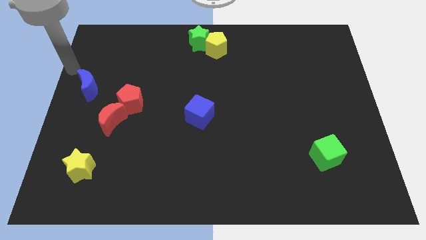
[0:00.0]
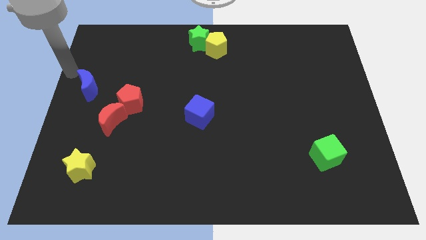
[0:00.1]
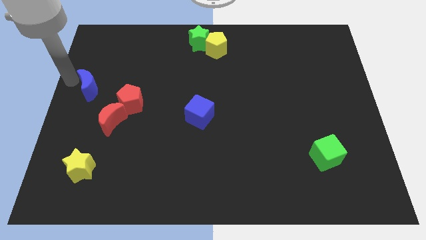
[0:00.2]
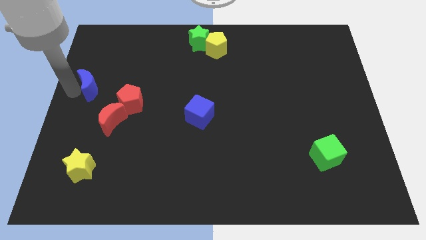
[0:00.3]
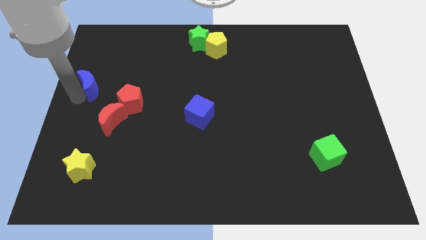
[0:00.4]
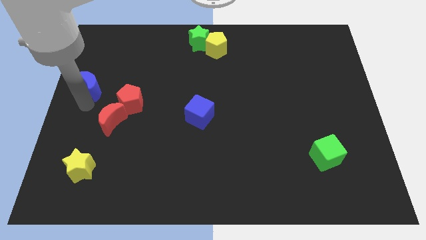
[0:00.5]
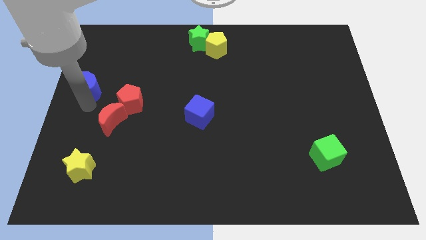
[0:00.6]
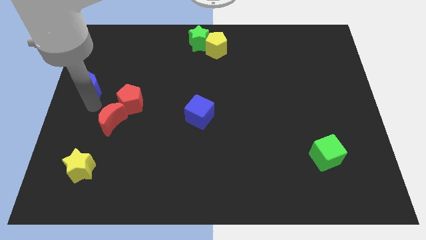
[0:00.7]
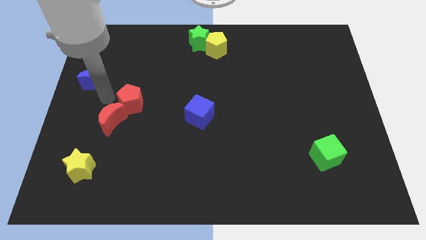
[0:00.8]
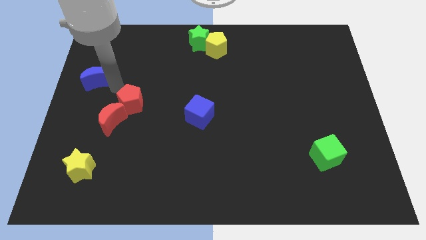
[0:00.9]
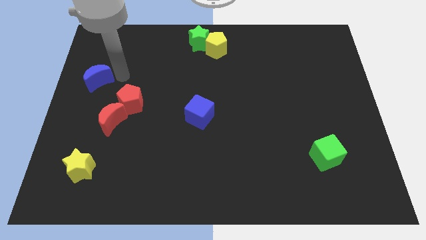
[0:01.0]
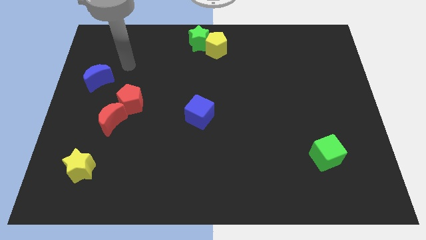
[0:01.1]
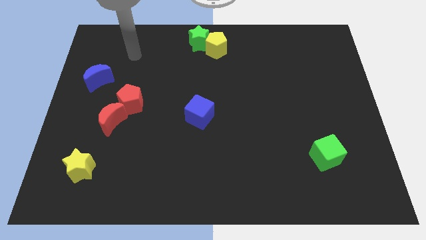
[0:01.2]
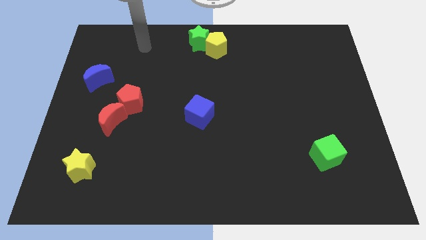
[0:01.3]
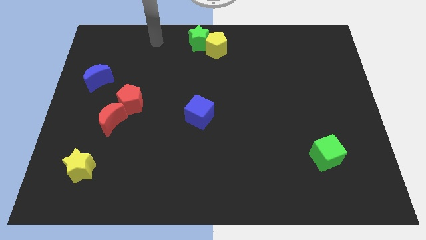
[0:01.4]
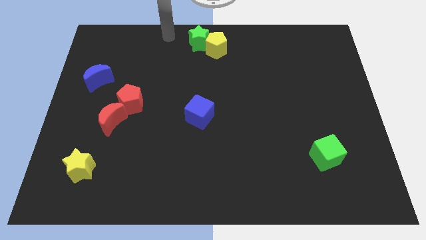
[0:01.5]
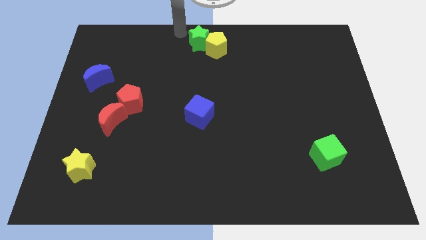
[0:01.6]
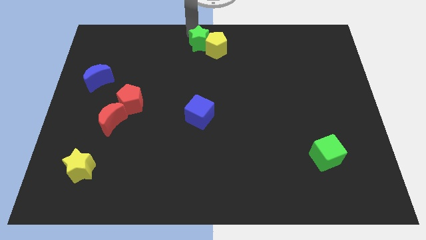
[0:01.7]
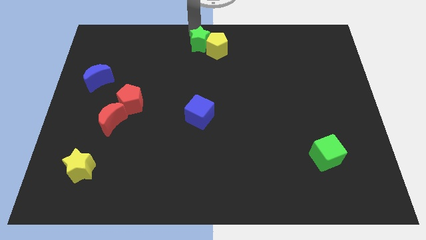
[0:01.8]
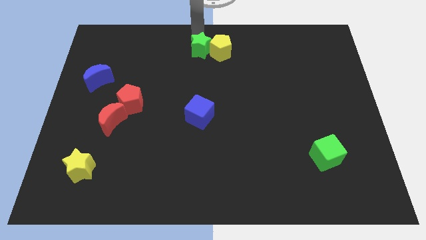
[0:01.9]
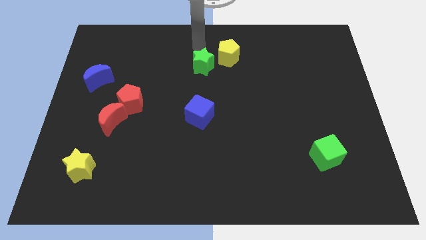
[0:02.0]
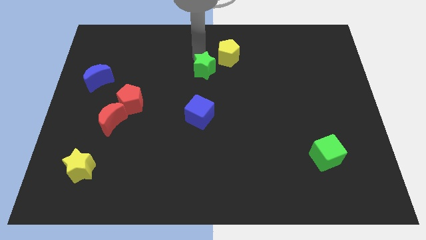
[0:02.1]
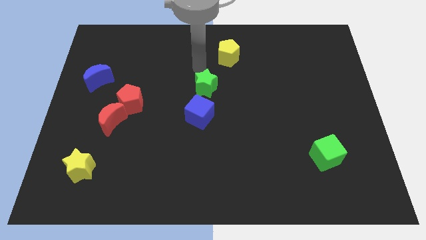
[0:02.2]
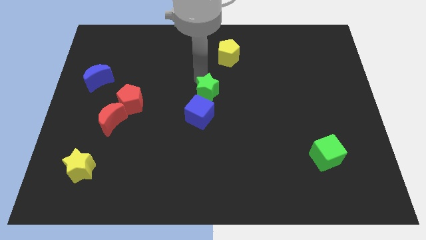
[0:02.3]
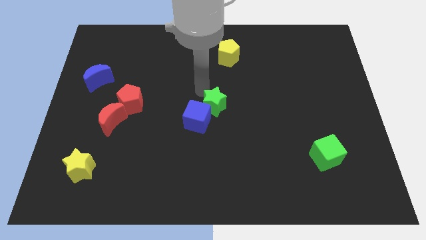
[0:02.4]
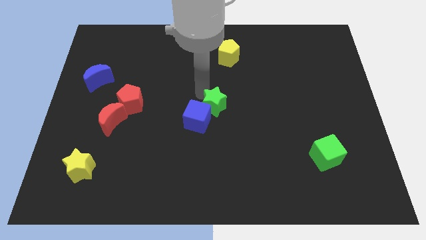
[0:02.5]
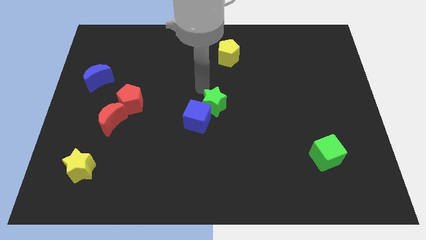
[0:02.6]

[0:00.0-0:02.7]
push the green star towards the blue block

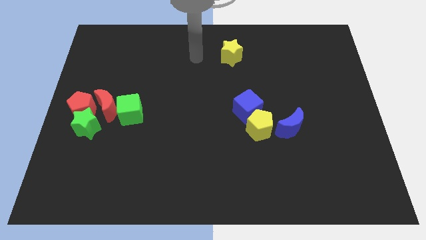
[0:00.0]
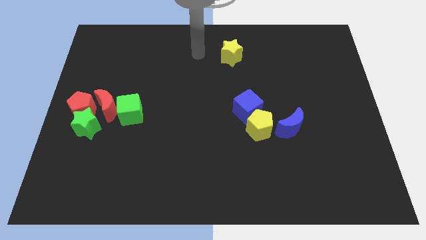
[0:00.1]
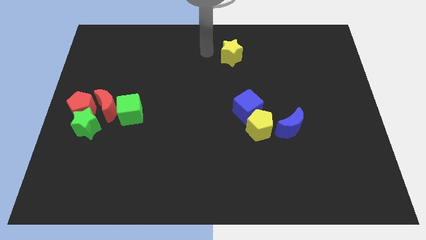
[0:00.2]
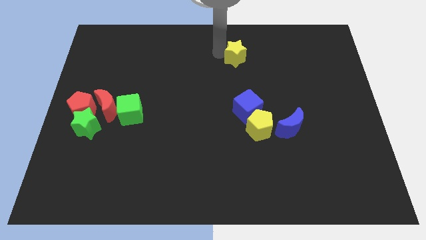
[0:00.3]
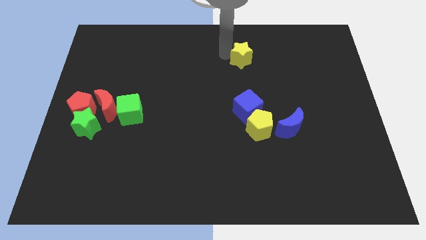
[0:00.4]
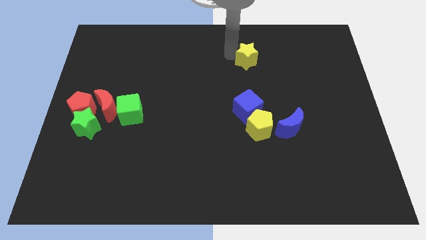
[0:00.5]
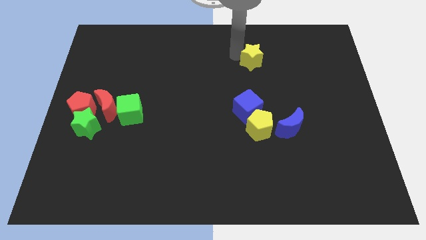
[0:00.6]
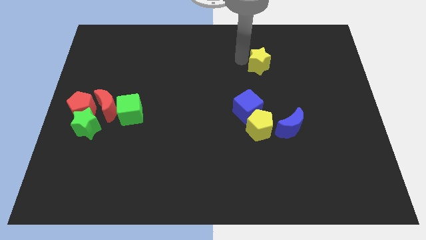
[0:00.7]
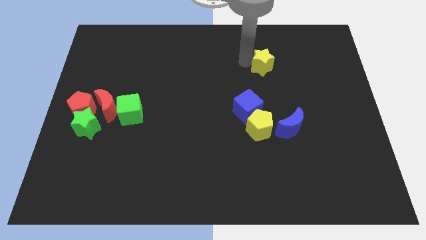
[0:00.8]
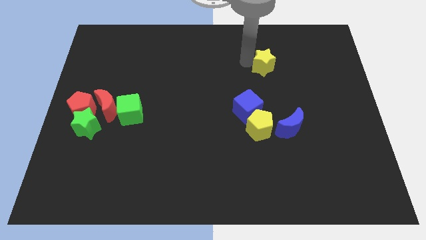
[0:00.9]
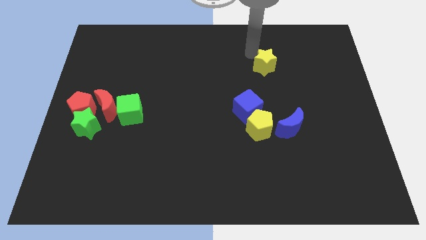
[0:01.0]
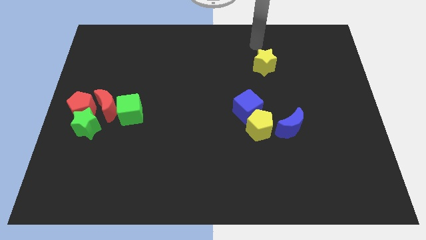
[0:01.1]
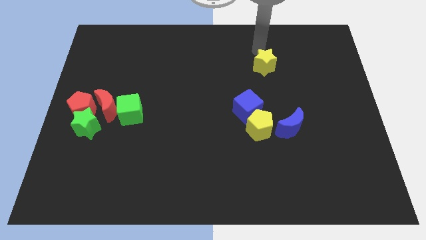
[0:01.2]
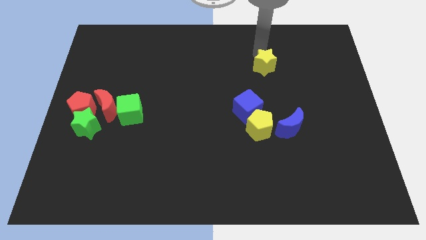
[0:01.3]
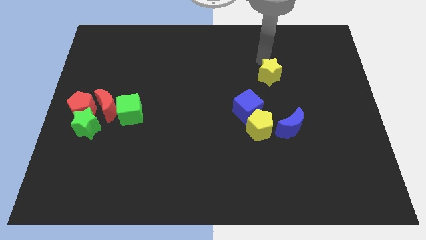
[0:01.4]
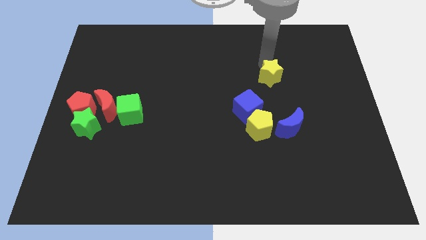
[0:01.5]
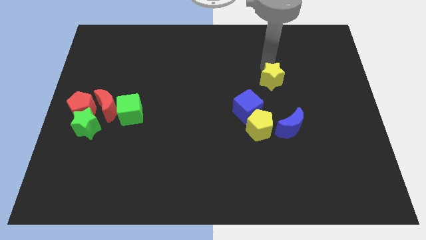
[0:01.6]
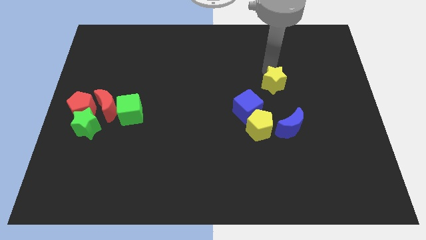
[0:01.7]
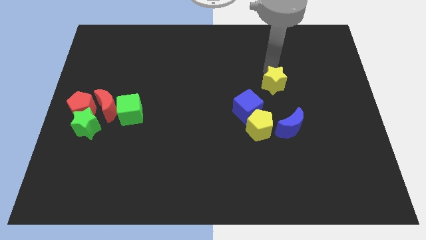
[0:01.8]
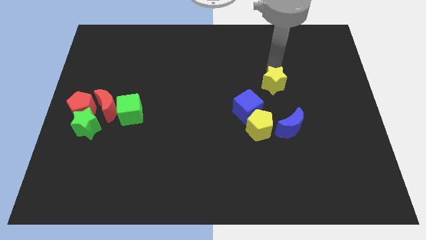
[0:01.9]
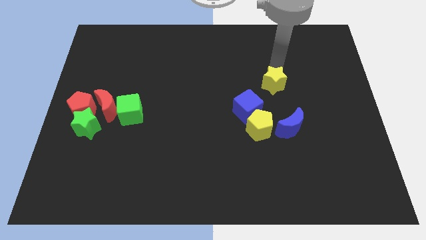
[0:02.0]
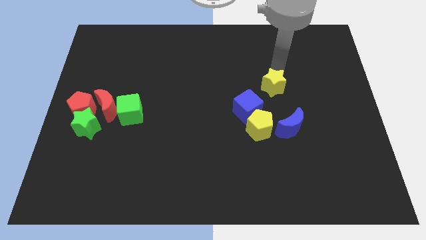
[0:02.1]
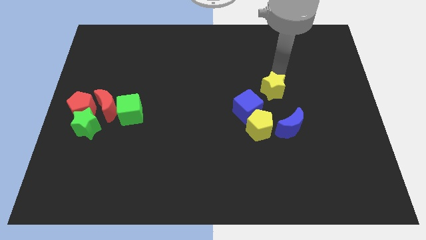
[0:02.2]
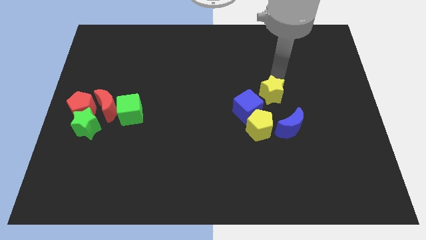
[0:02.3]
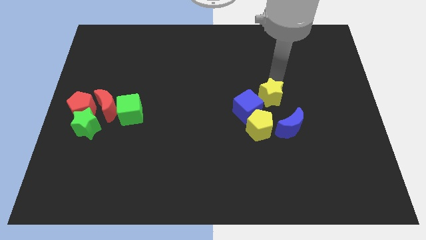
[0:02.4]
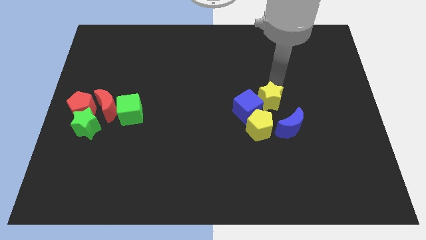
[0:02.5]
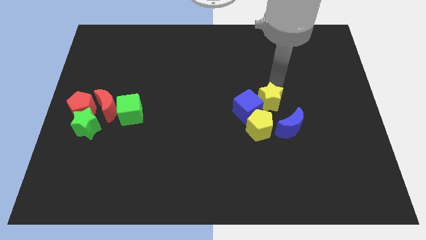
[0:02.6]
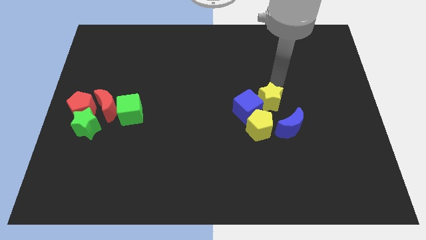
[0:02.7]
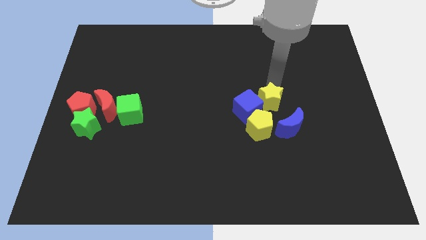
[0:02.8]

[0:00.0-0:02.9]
place yellow star beside blue cube

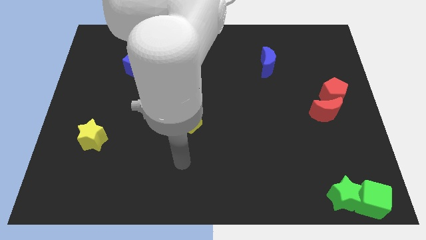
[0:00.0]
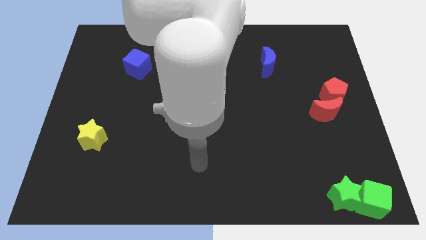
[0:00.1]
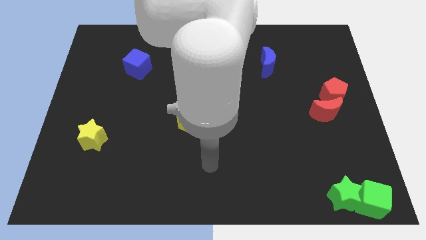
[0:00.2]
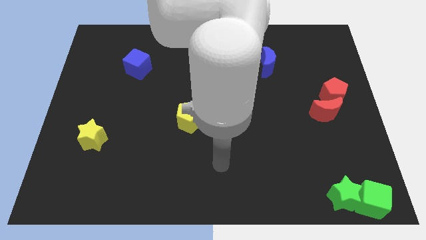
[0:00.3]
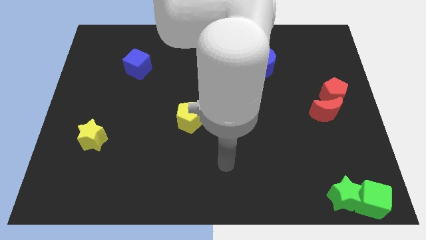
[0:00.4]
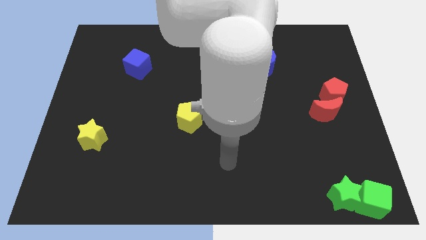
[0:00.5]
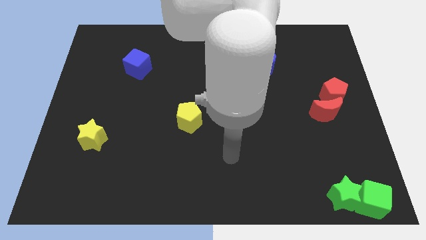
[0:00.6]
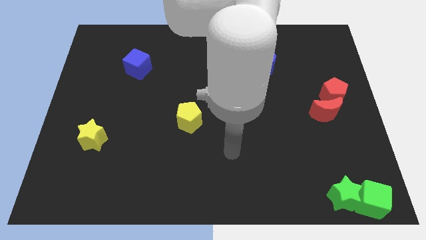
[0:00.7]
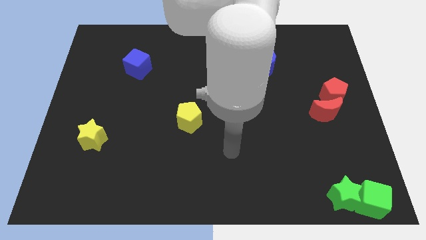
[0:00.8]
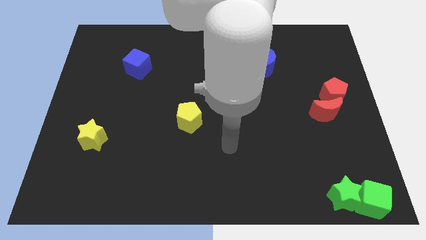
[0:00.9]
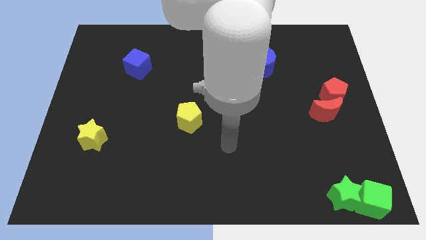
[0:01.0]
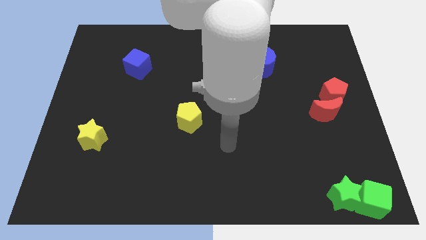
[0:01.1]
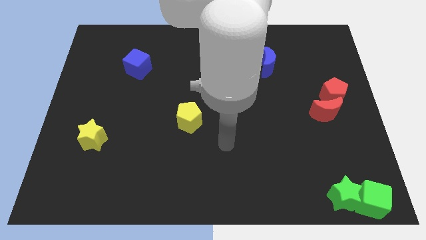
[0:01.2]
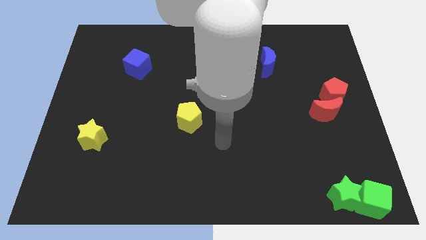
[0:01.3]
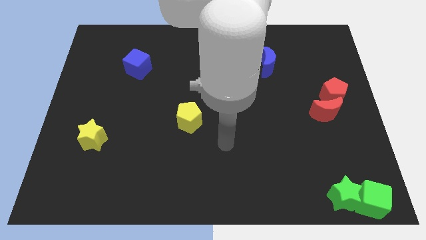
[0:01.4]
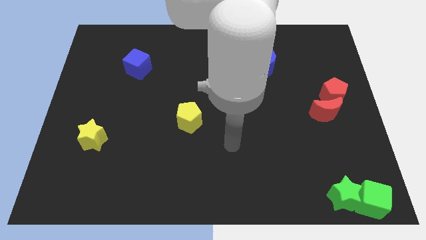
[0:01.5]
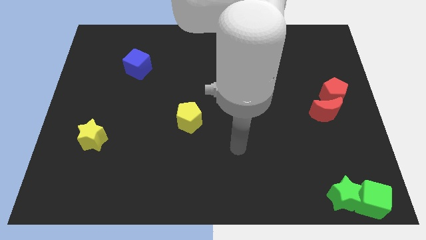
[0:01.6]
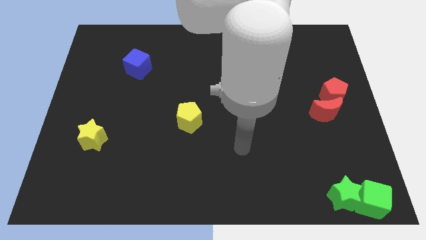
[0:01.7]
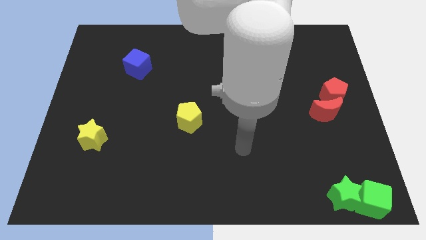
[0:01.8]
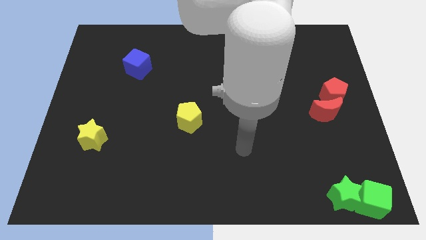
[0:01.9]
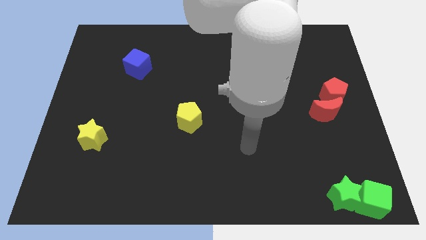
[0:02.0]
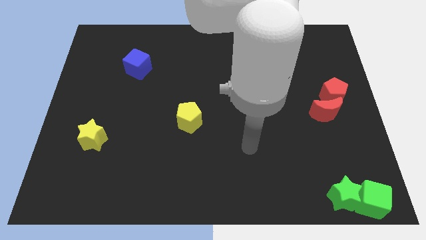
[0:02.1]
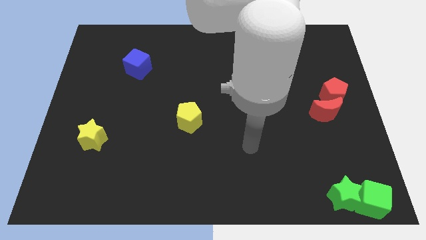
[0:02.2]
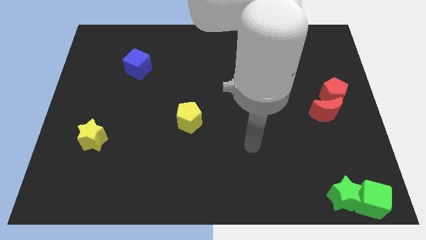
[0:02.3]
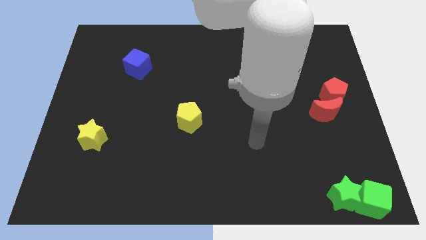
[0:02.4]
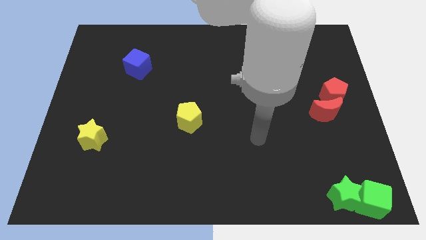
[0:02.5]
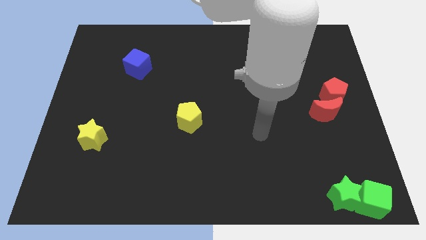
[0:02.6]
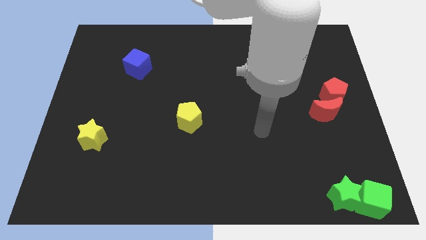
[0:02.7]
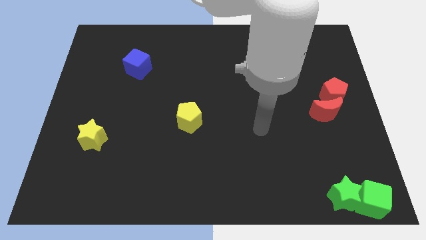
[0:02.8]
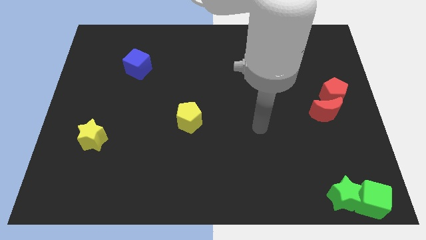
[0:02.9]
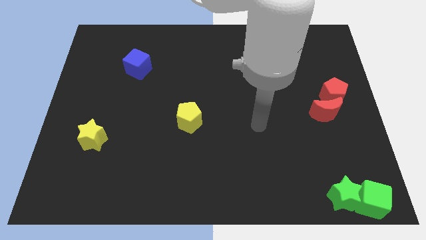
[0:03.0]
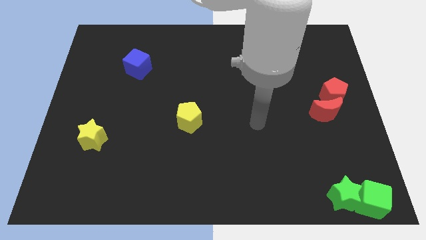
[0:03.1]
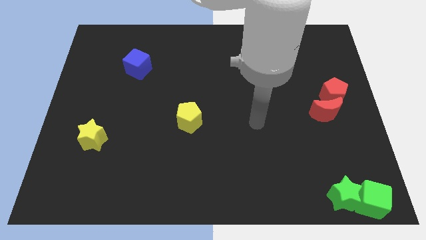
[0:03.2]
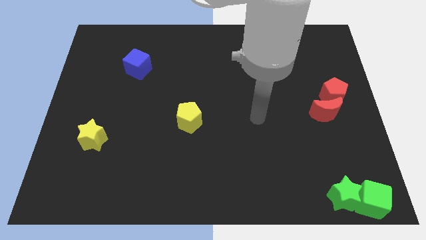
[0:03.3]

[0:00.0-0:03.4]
place the arm between the yellow pentagon and red moon
